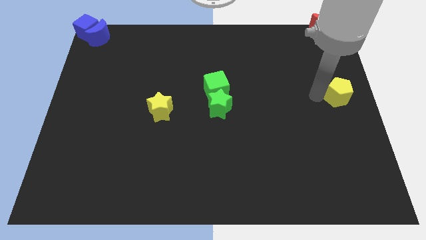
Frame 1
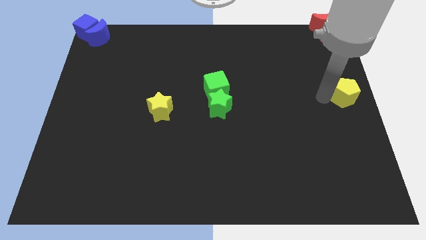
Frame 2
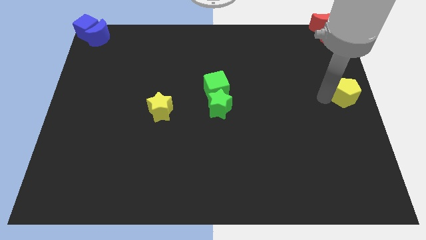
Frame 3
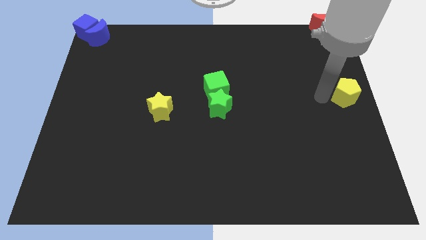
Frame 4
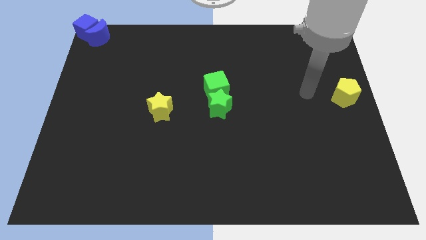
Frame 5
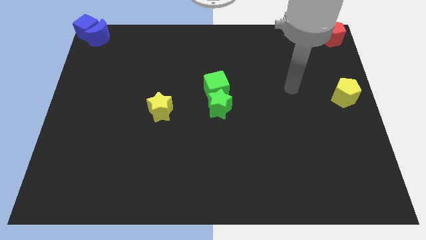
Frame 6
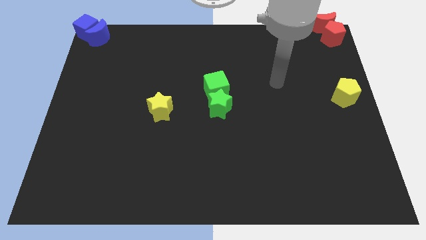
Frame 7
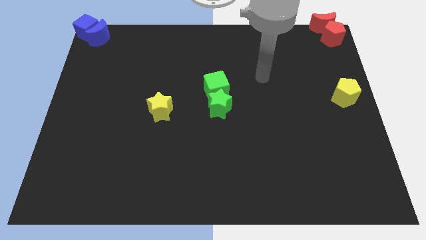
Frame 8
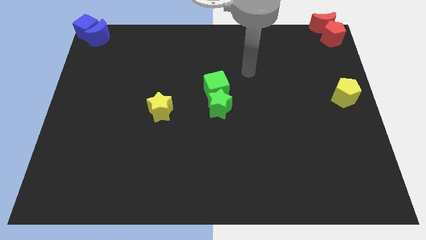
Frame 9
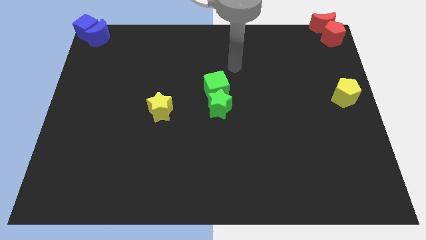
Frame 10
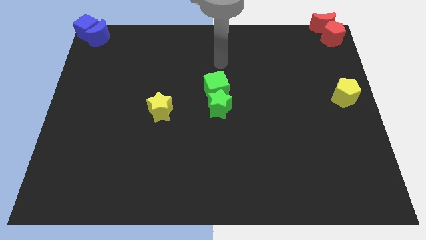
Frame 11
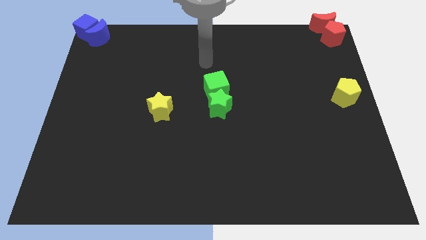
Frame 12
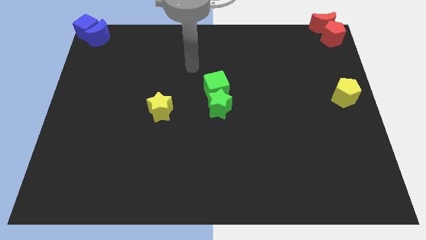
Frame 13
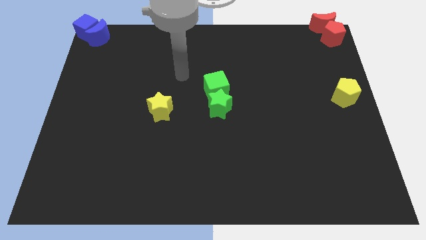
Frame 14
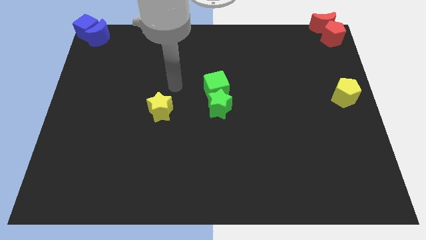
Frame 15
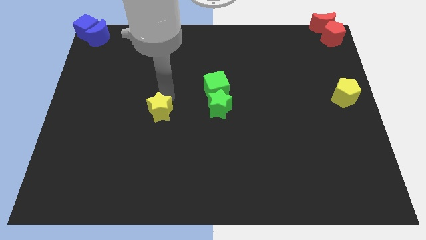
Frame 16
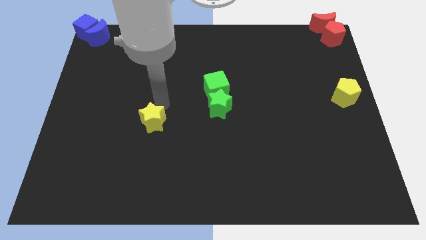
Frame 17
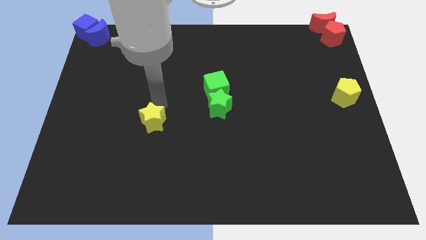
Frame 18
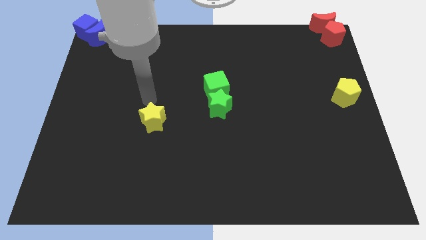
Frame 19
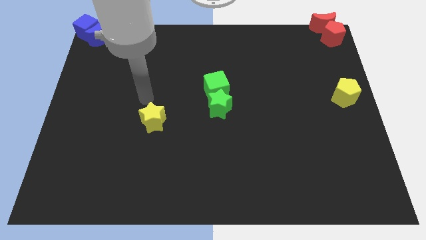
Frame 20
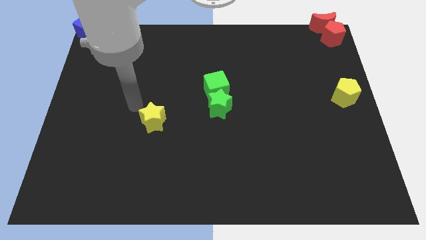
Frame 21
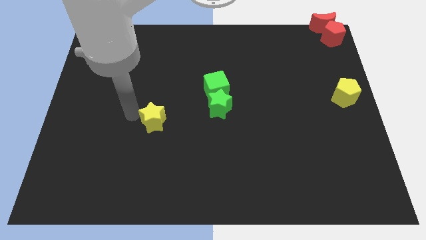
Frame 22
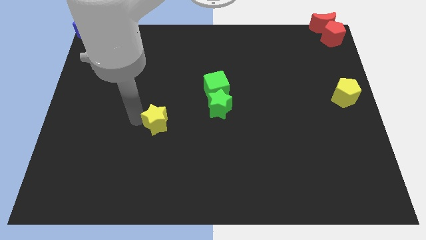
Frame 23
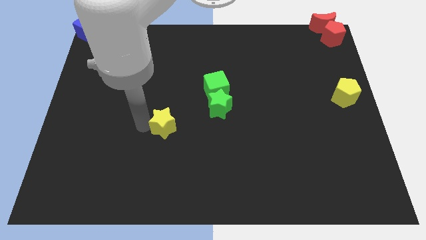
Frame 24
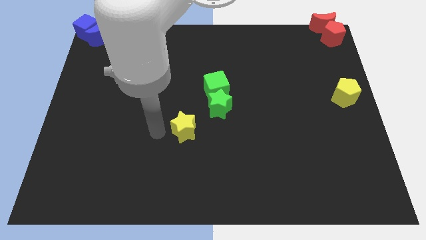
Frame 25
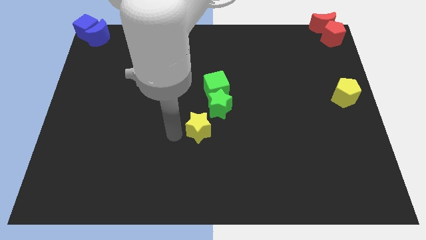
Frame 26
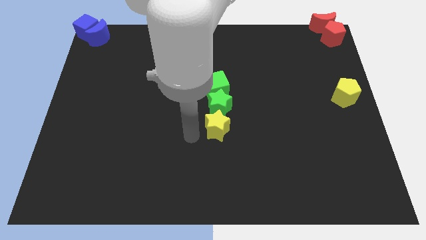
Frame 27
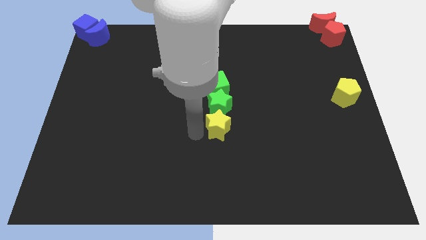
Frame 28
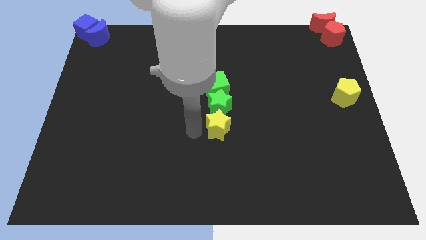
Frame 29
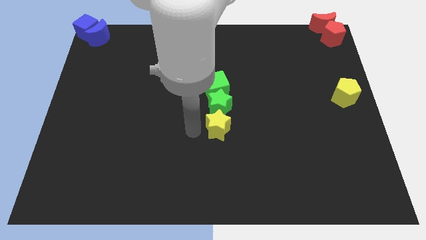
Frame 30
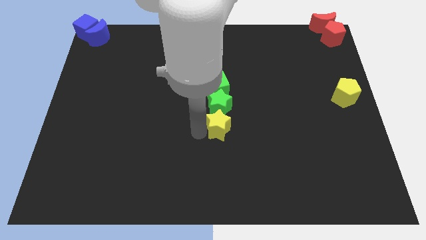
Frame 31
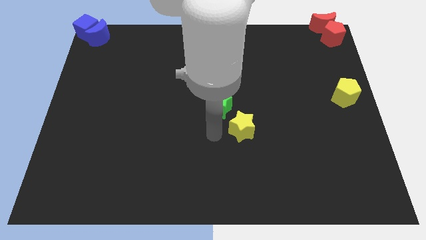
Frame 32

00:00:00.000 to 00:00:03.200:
push the yellow star below to the green star

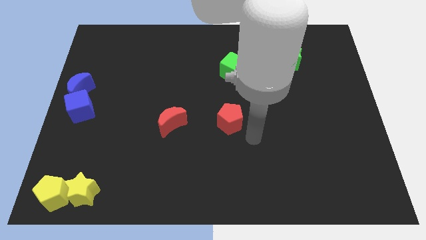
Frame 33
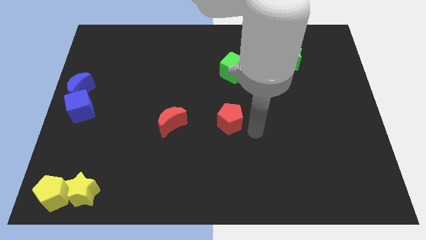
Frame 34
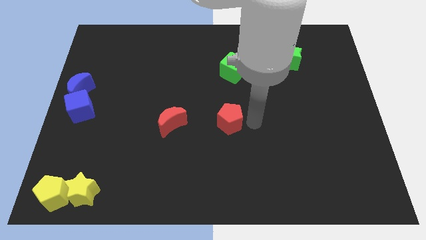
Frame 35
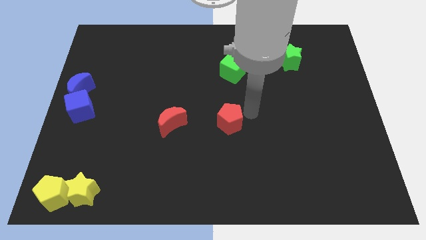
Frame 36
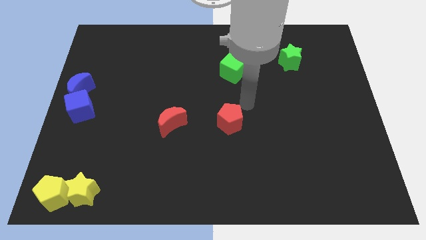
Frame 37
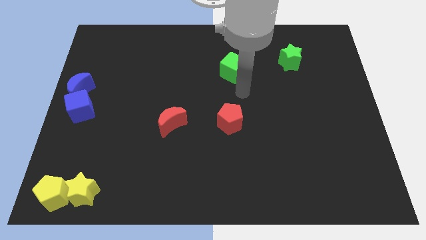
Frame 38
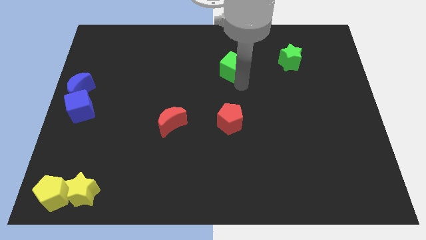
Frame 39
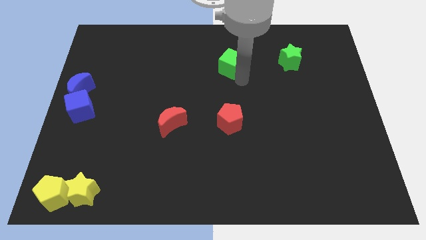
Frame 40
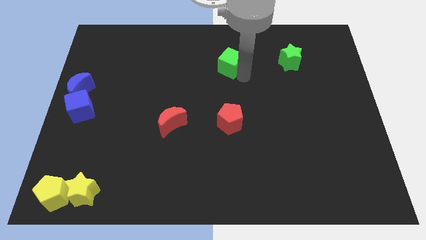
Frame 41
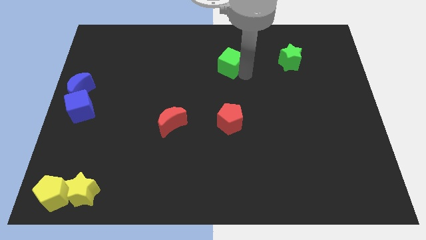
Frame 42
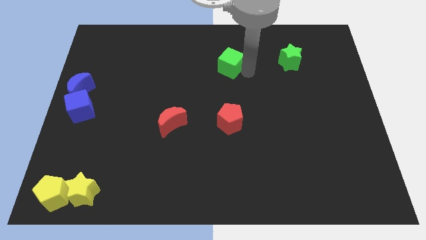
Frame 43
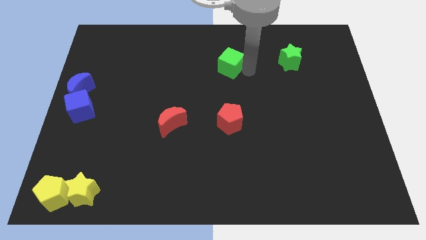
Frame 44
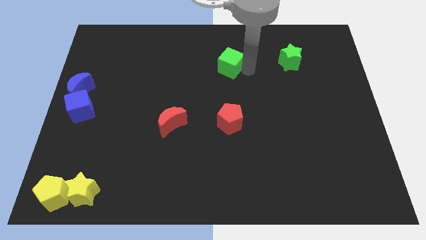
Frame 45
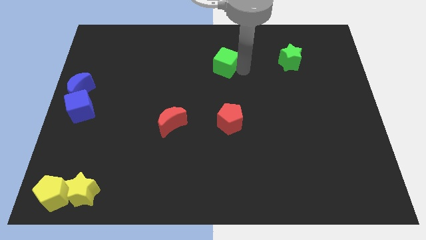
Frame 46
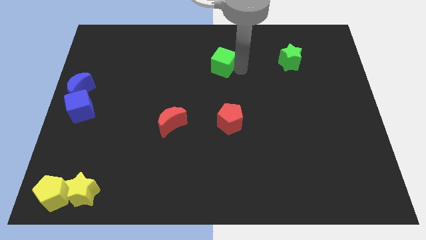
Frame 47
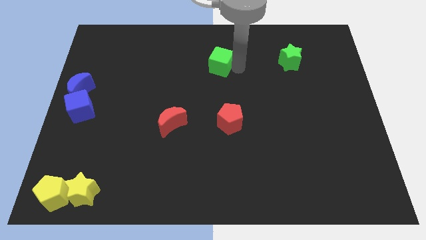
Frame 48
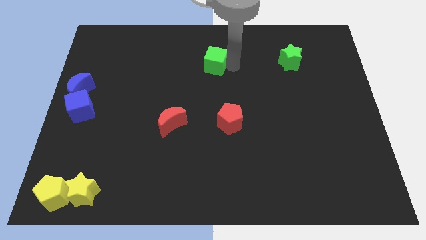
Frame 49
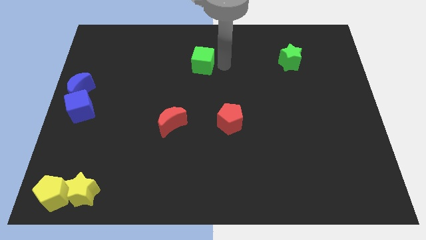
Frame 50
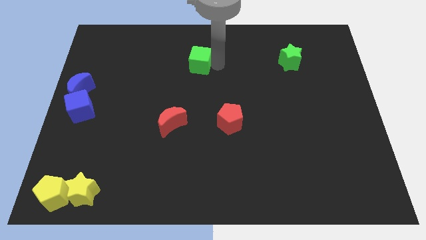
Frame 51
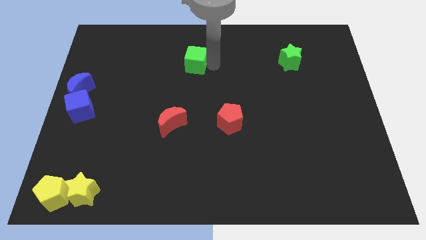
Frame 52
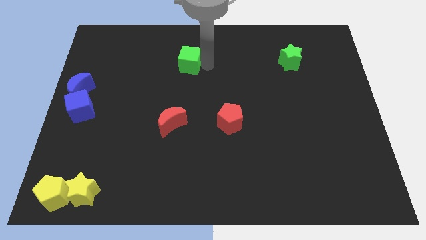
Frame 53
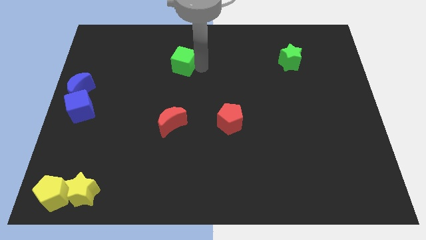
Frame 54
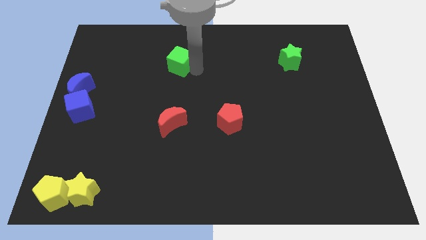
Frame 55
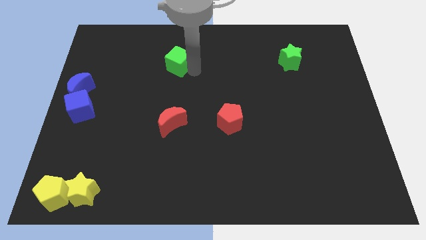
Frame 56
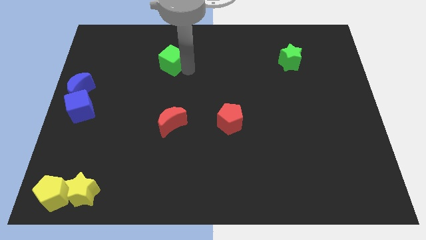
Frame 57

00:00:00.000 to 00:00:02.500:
slide the green cube slightly to the left

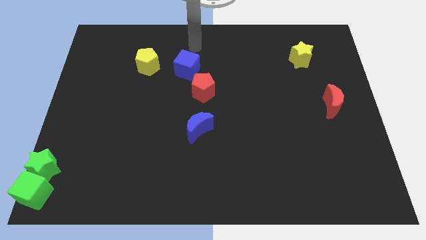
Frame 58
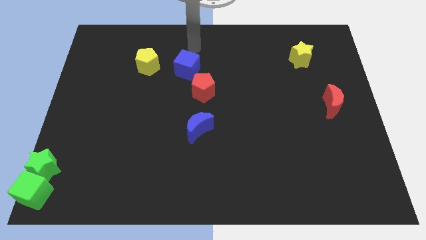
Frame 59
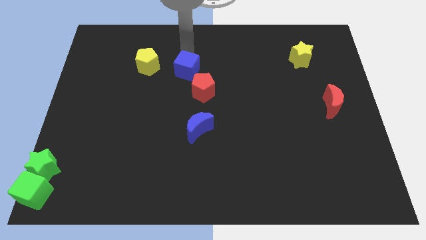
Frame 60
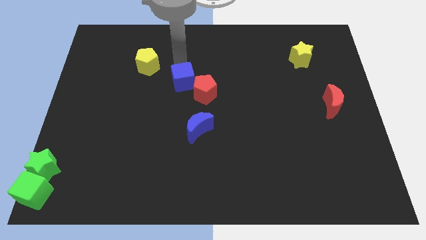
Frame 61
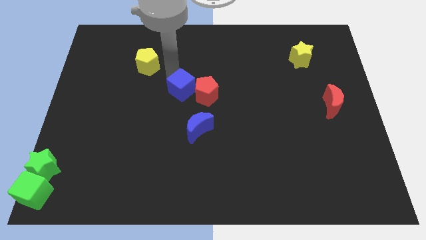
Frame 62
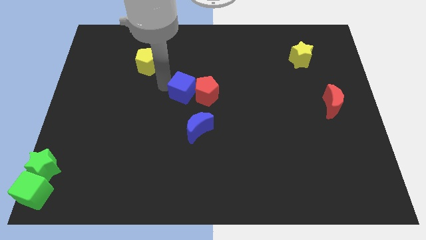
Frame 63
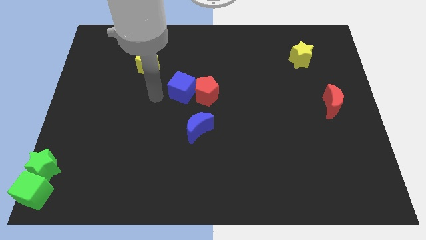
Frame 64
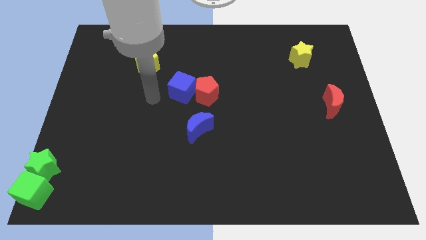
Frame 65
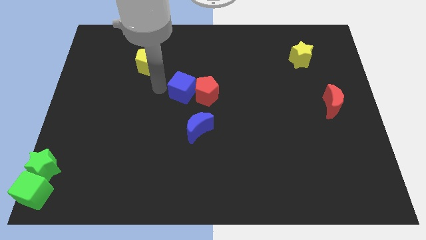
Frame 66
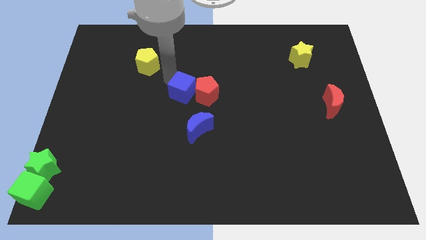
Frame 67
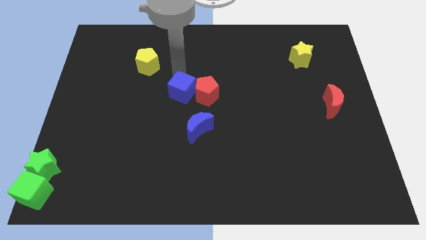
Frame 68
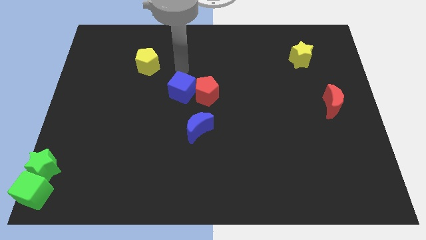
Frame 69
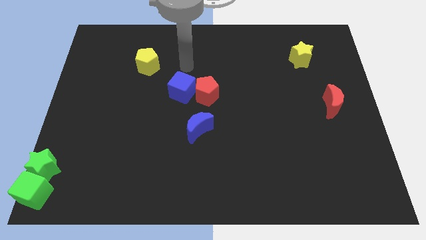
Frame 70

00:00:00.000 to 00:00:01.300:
push the blue cube to the left of the red pentagon

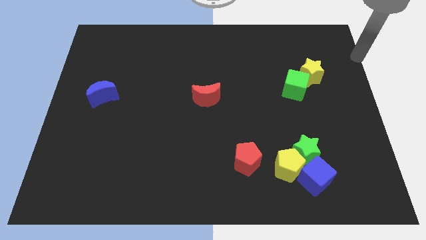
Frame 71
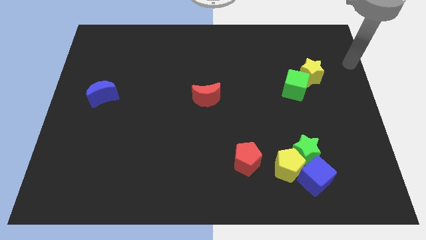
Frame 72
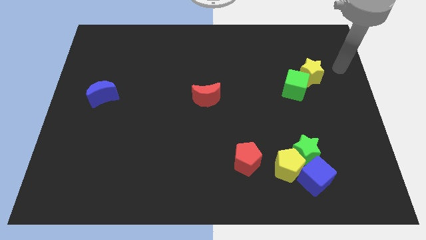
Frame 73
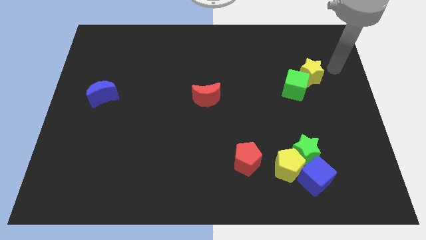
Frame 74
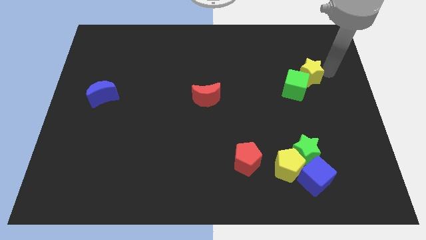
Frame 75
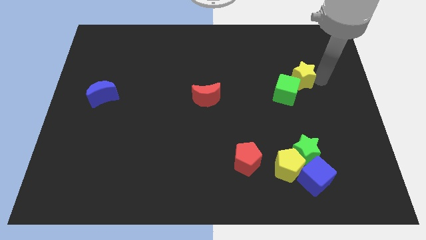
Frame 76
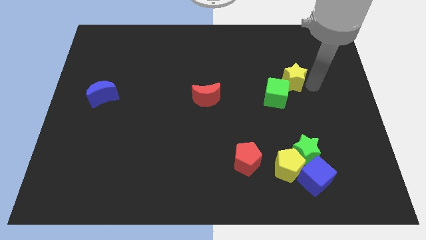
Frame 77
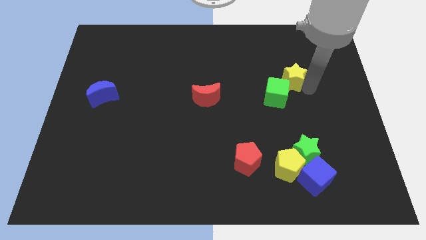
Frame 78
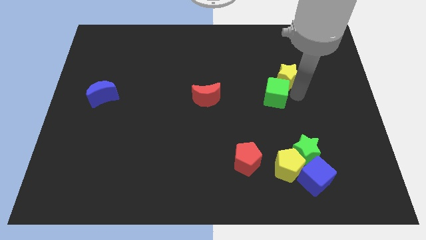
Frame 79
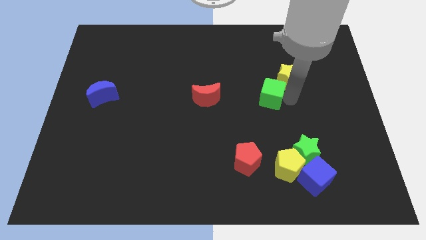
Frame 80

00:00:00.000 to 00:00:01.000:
place yellow star above green star

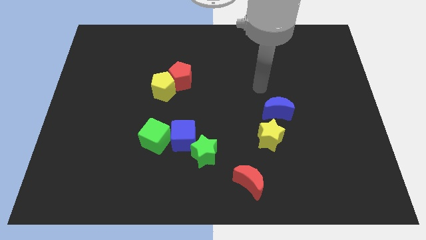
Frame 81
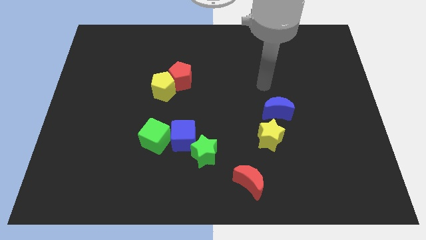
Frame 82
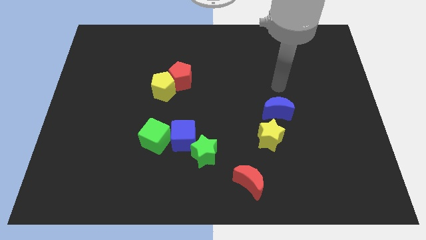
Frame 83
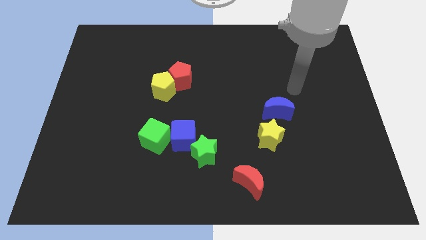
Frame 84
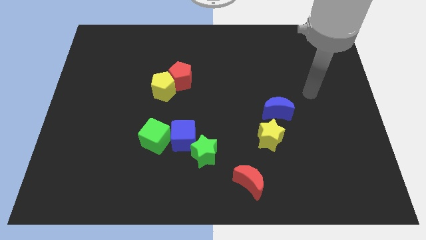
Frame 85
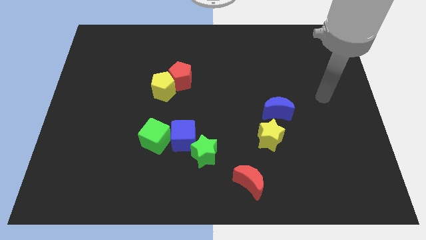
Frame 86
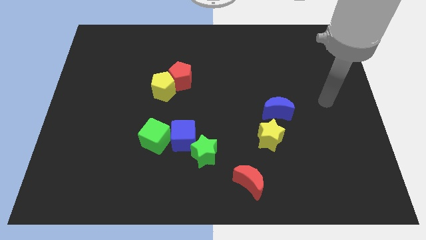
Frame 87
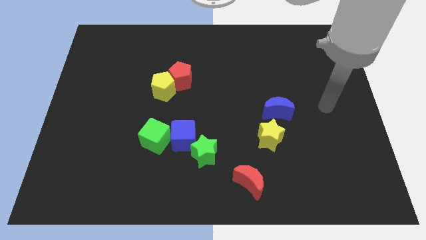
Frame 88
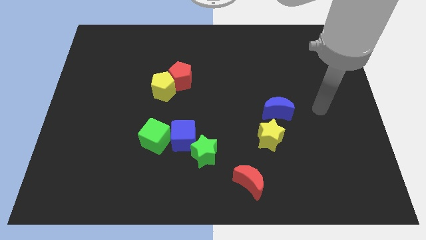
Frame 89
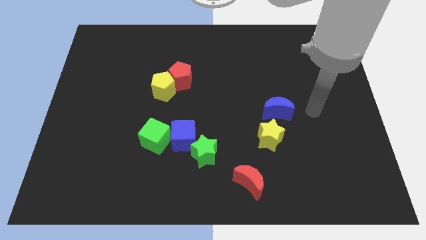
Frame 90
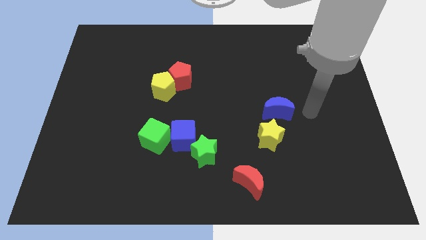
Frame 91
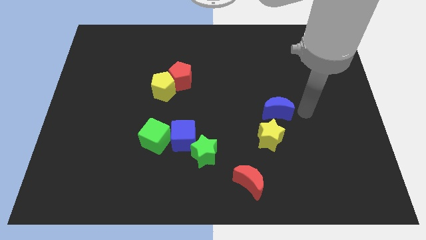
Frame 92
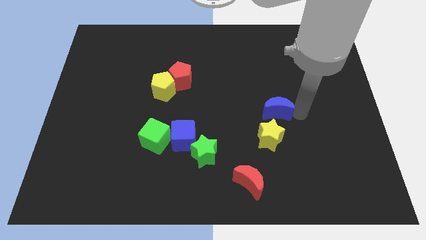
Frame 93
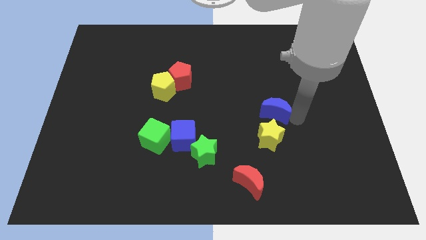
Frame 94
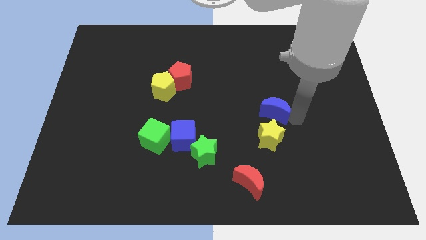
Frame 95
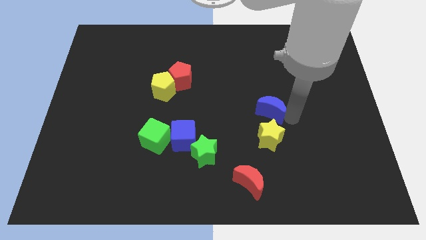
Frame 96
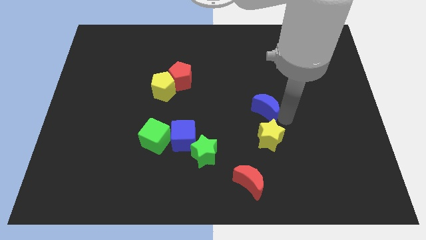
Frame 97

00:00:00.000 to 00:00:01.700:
push the blue crescent to the left of the board
